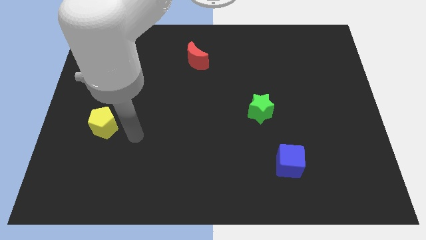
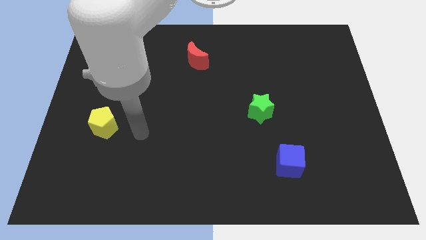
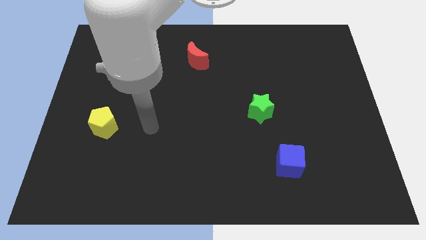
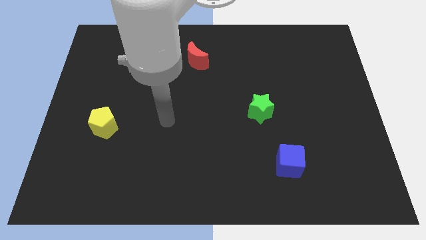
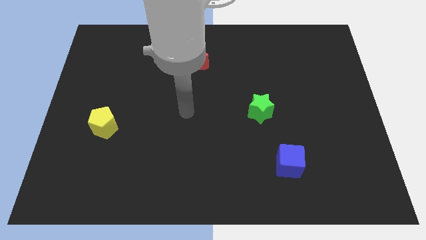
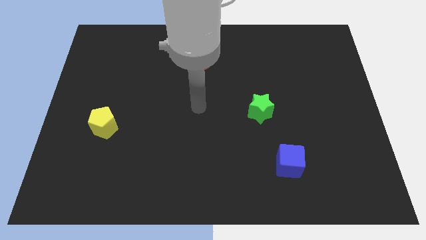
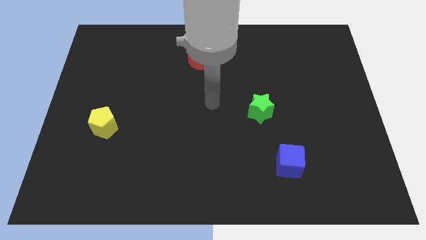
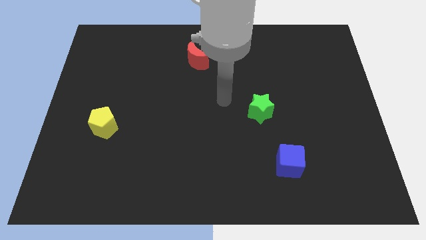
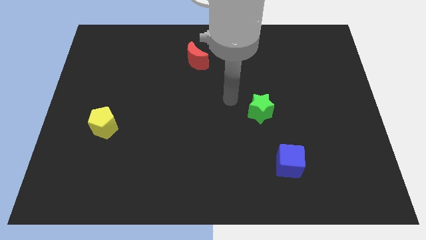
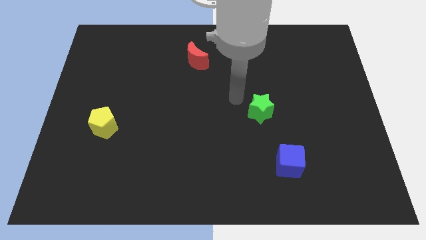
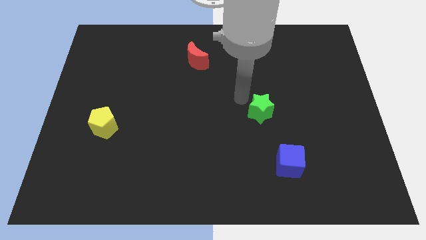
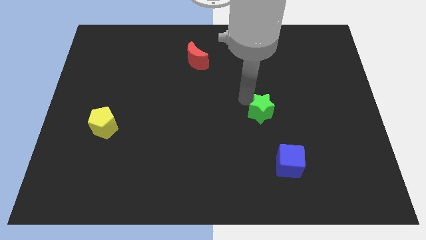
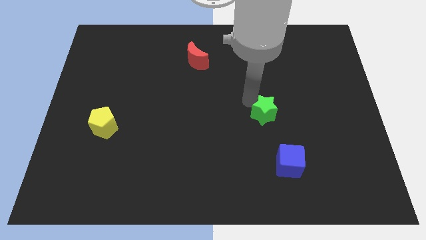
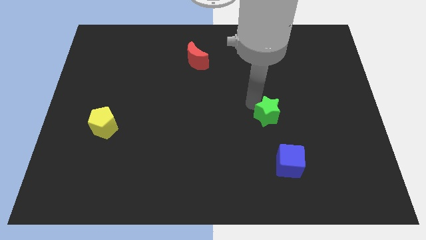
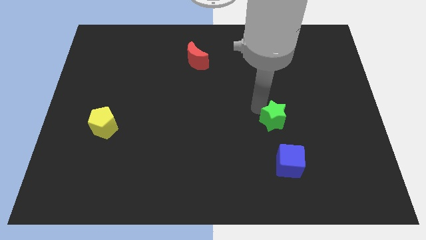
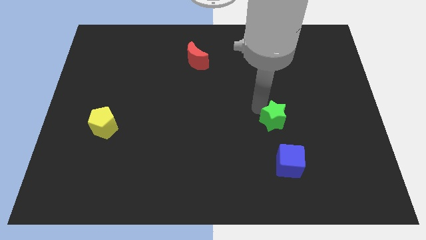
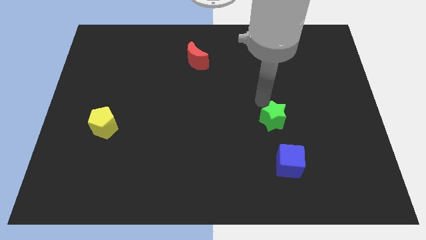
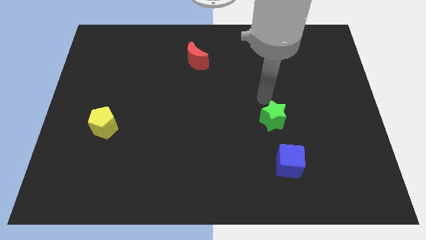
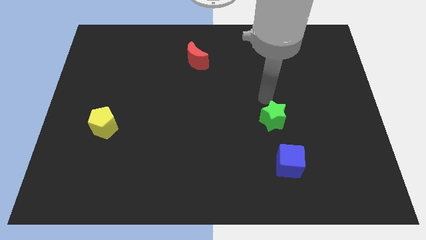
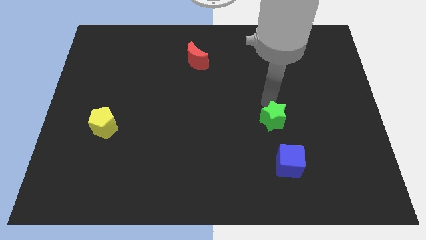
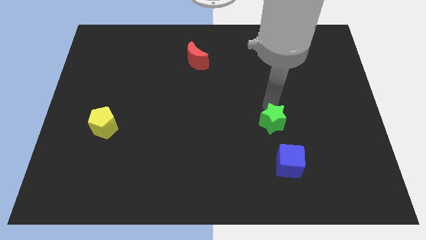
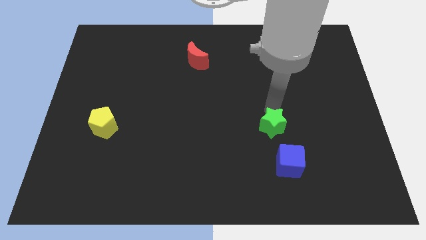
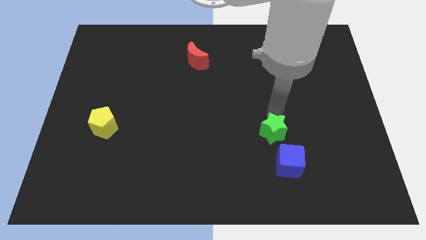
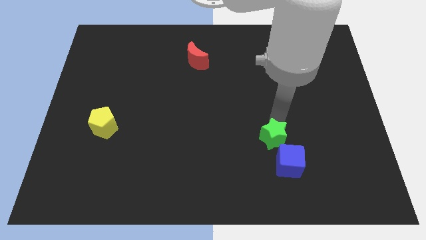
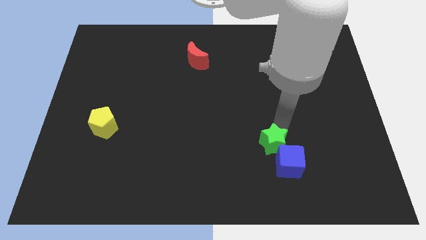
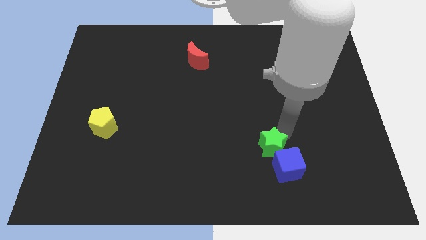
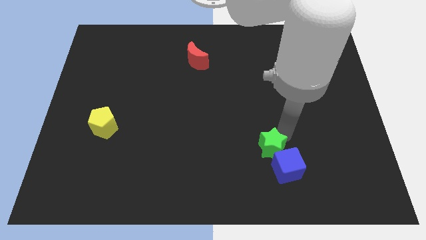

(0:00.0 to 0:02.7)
push the star towards the blue cube

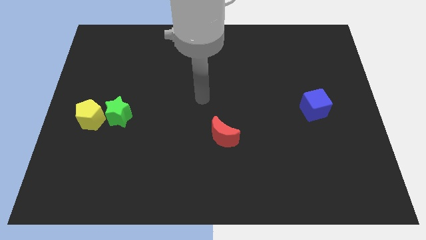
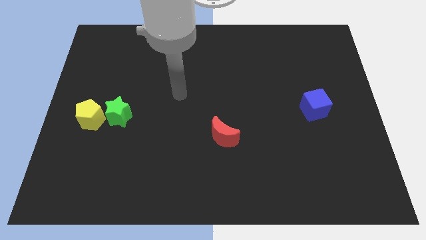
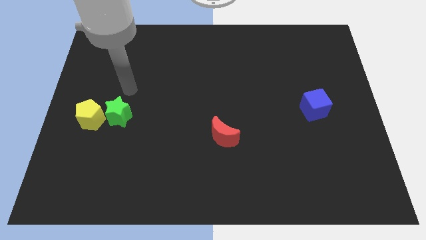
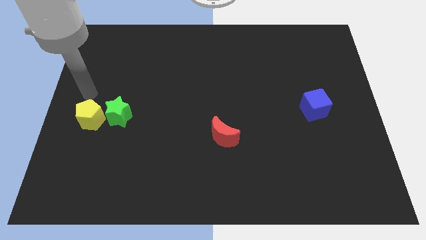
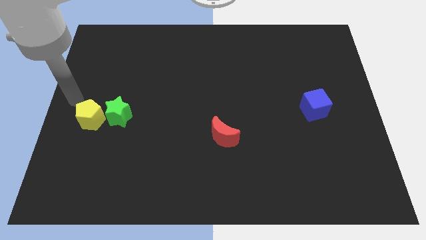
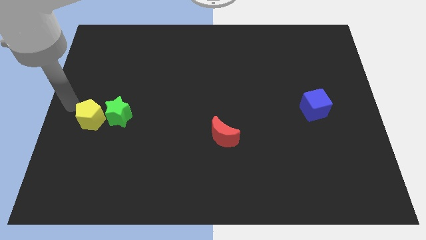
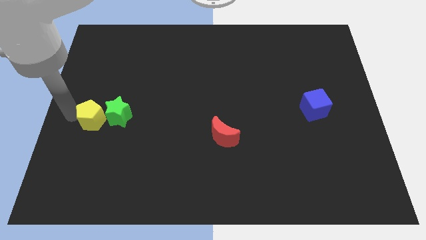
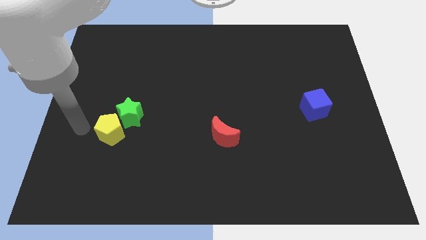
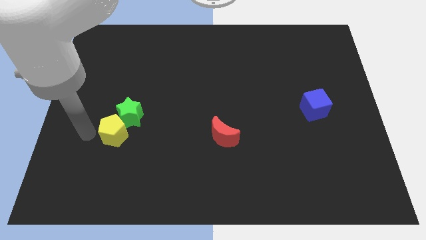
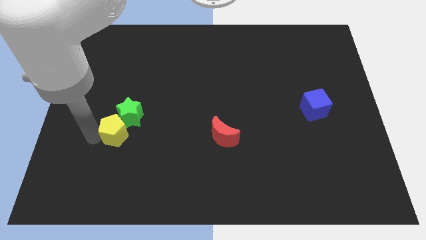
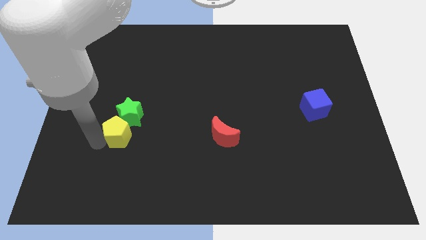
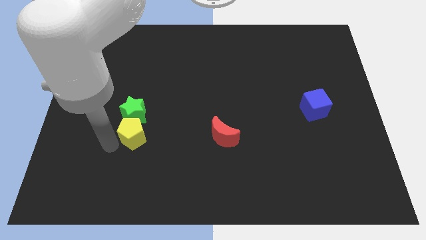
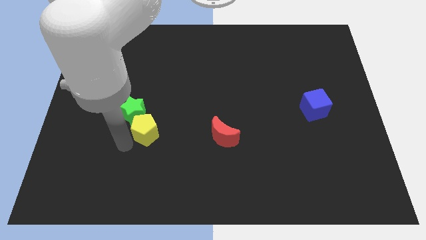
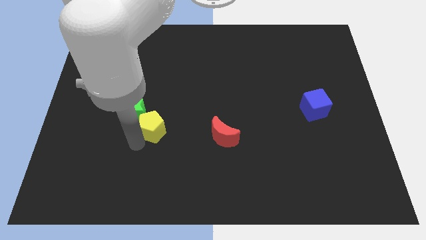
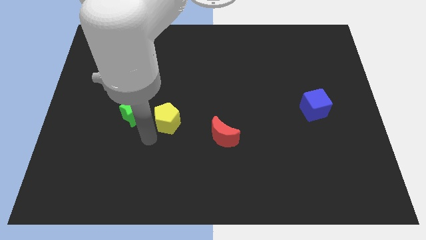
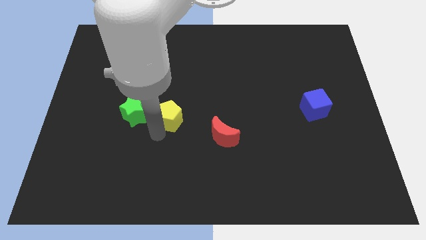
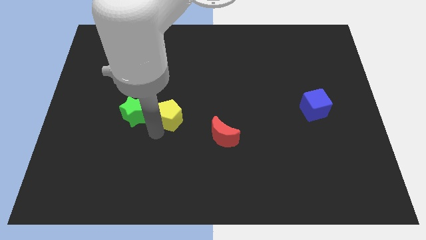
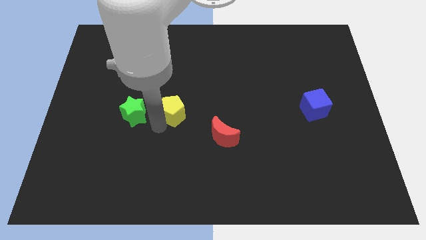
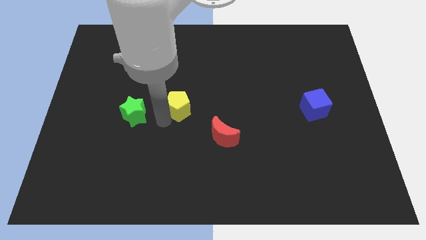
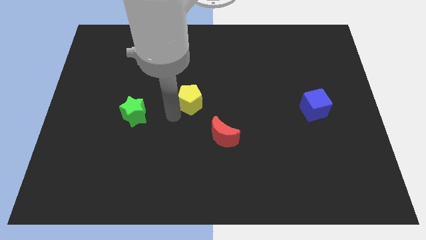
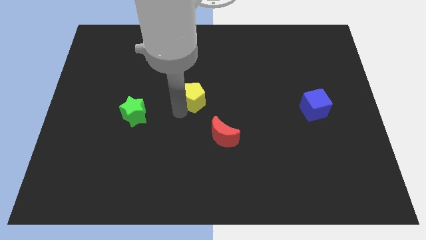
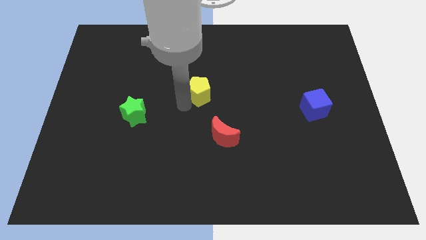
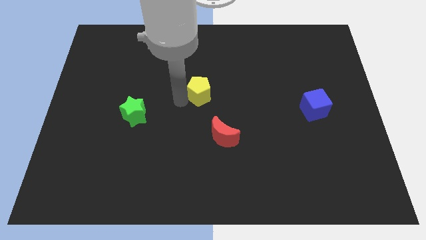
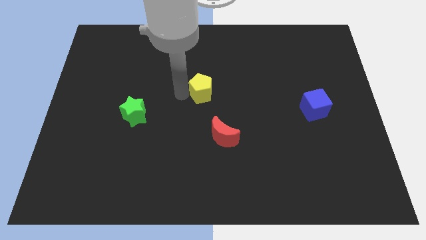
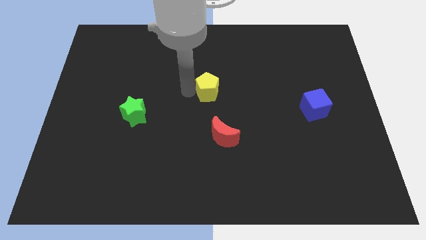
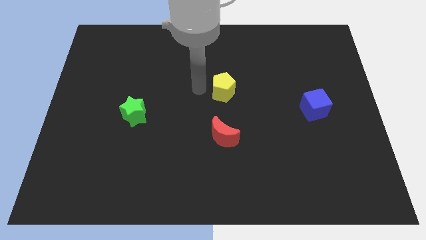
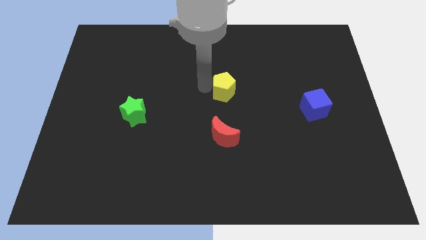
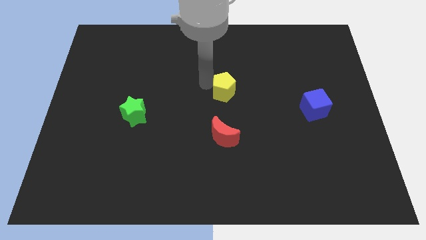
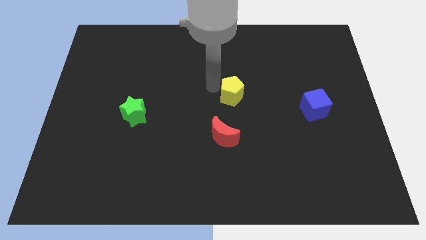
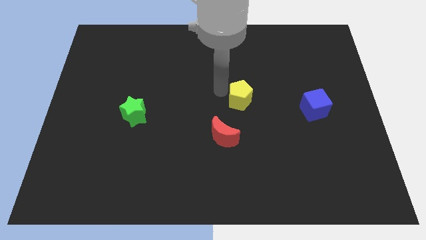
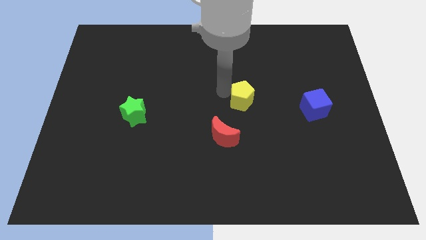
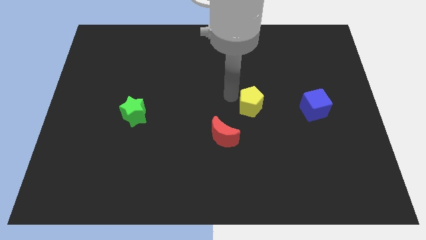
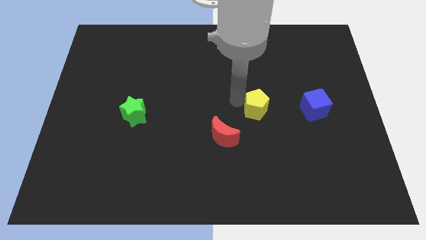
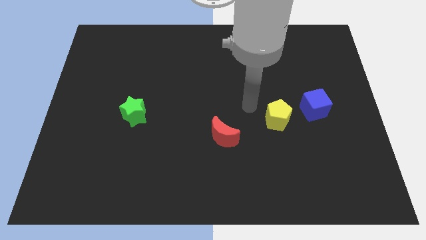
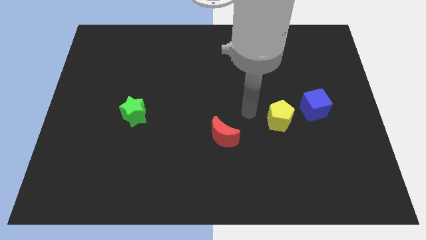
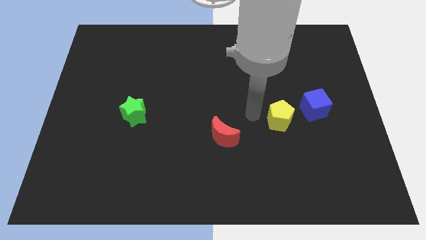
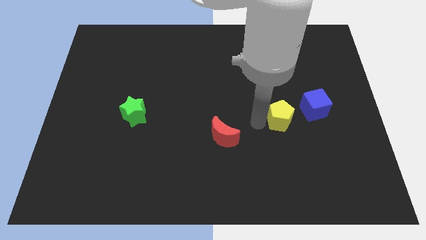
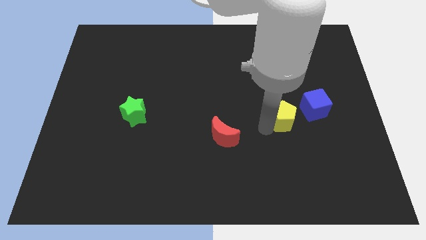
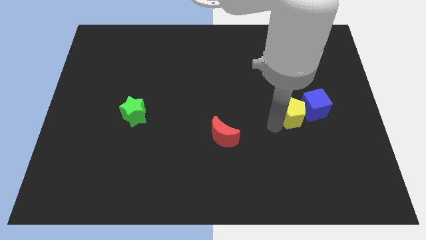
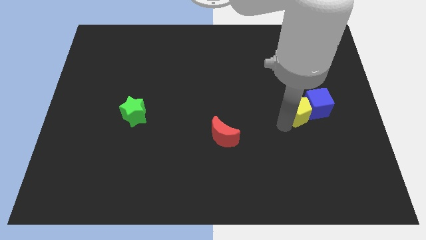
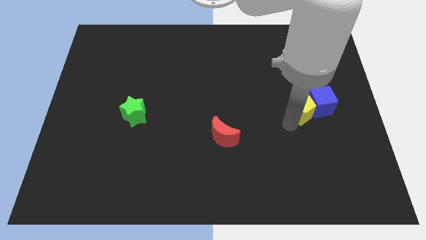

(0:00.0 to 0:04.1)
move the pentagon to the blue cube

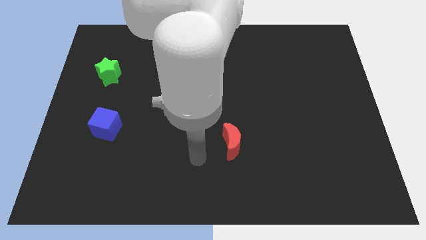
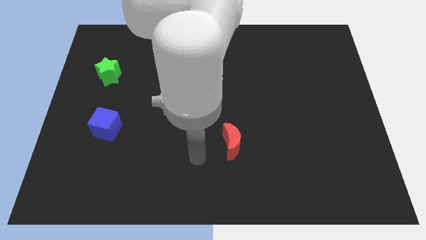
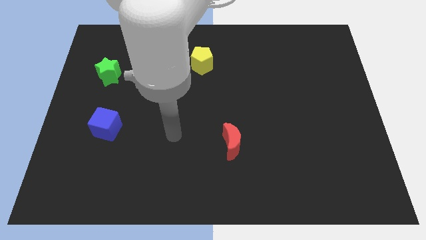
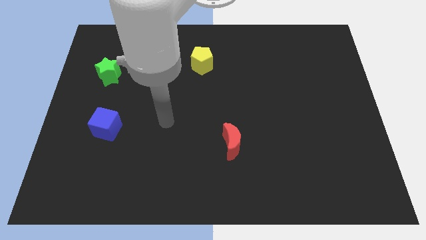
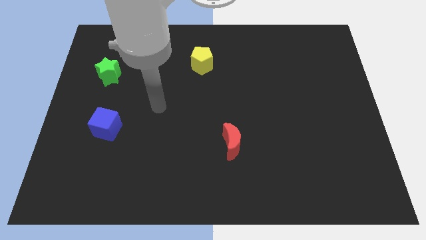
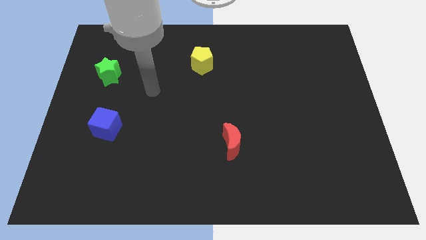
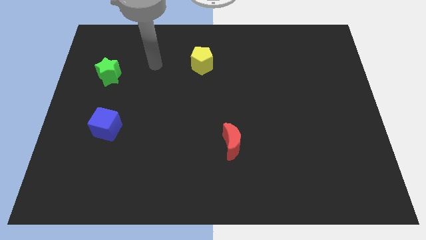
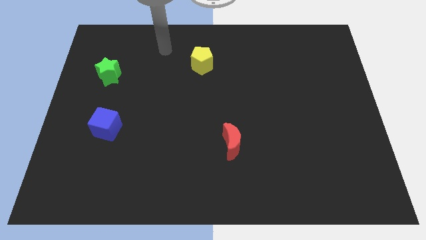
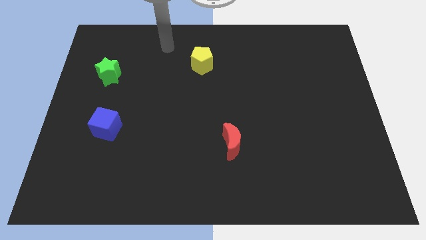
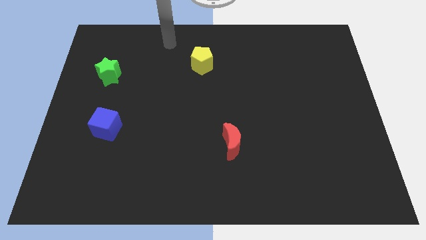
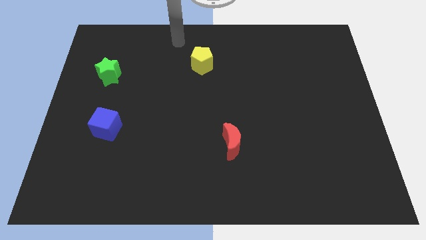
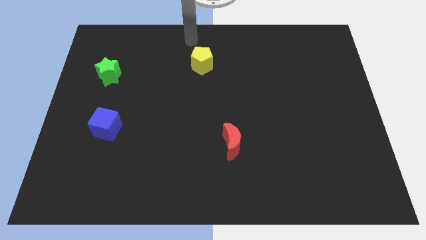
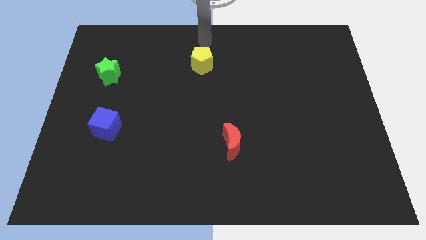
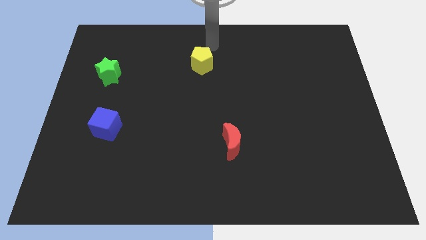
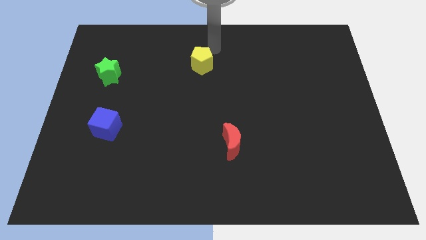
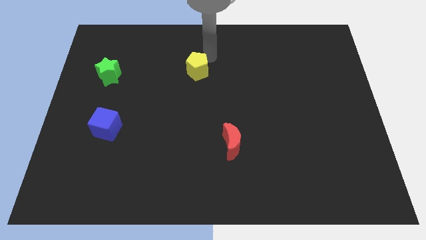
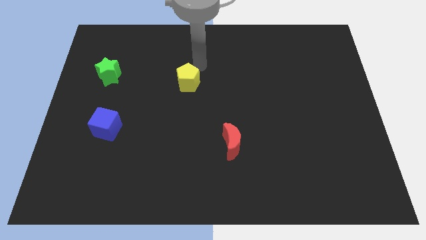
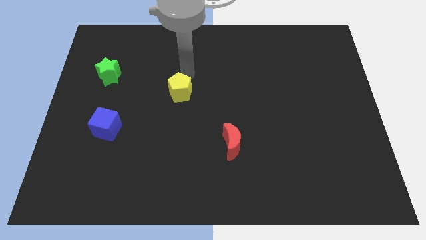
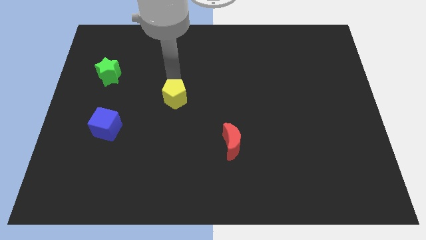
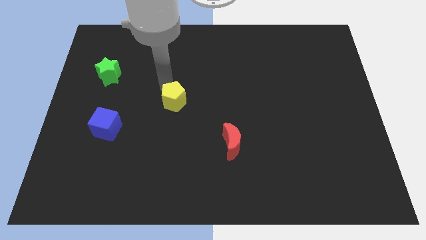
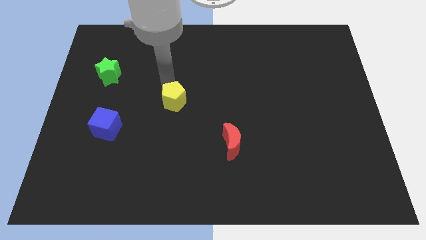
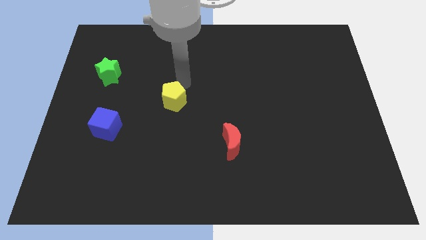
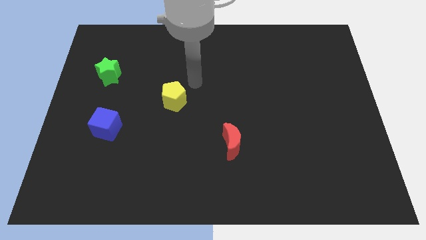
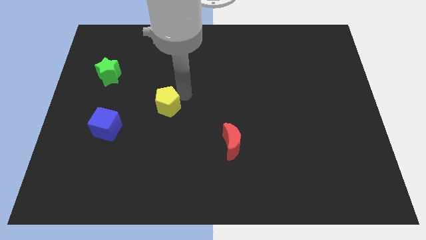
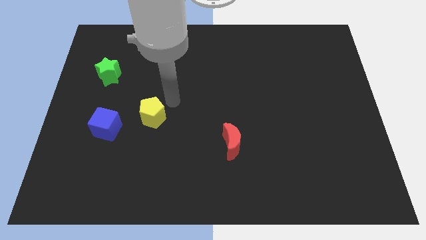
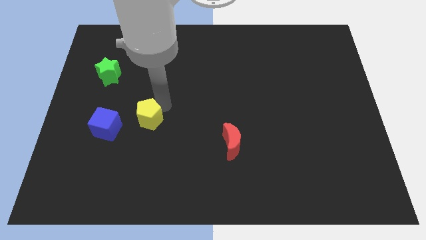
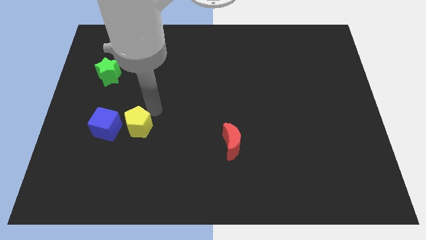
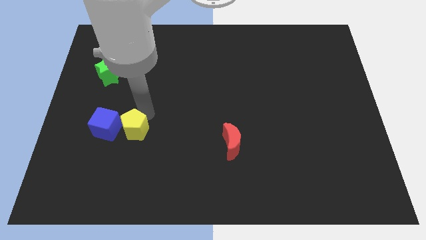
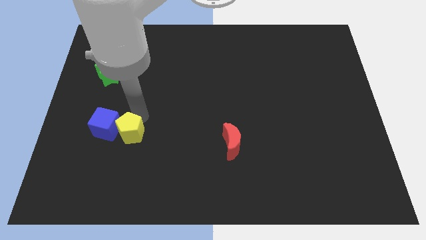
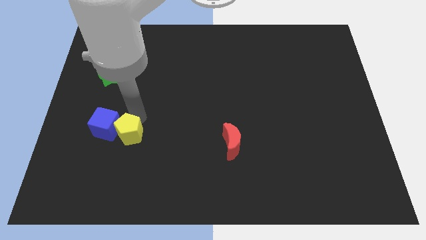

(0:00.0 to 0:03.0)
put the pentagon next to the blue cube
